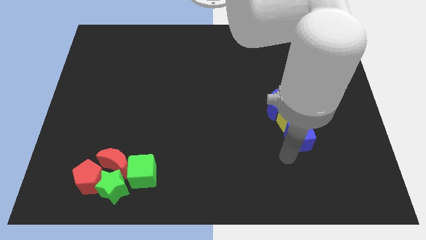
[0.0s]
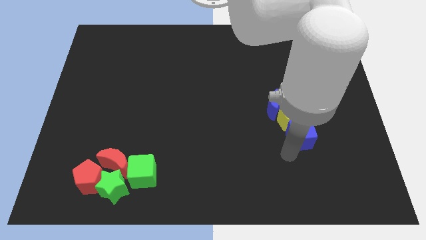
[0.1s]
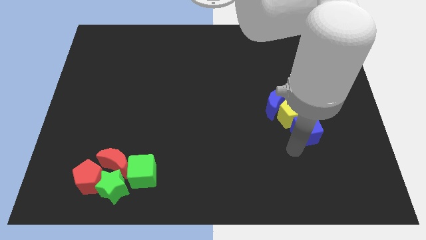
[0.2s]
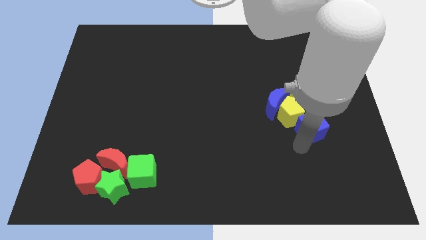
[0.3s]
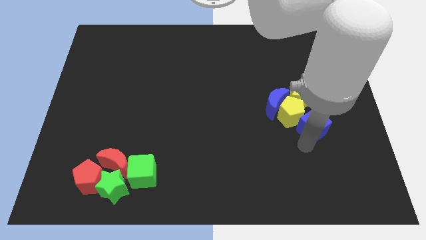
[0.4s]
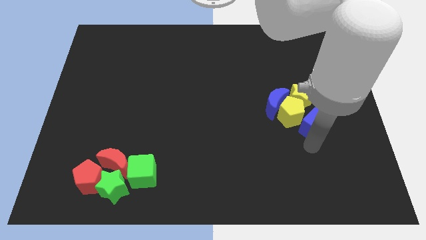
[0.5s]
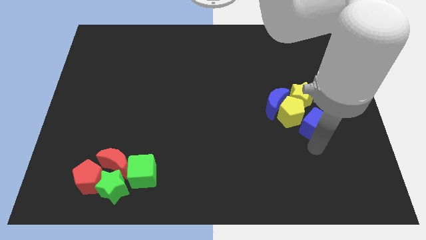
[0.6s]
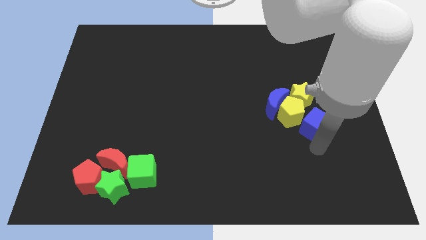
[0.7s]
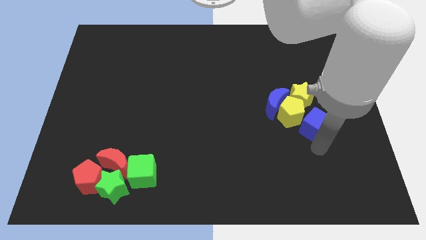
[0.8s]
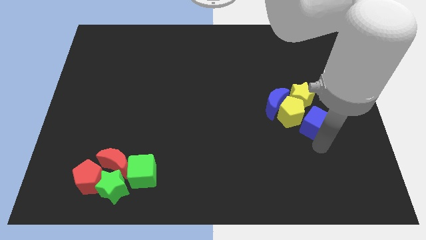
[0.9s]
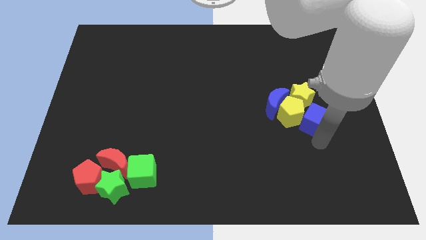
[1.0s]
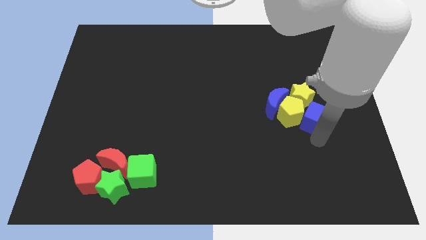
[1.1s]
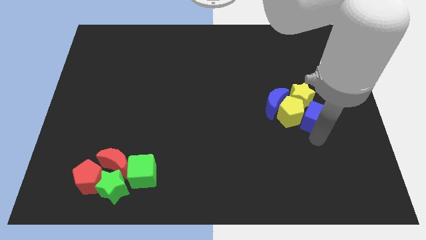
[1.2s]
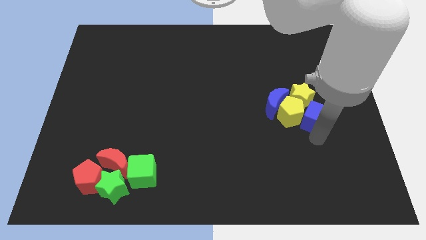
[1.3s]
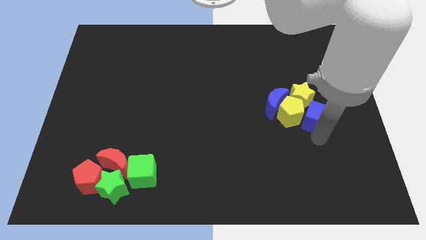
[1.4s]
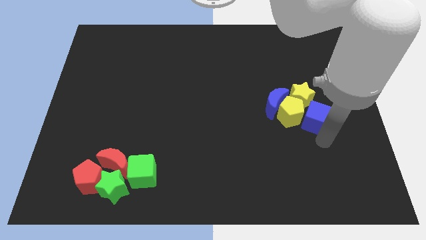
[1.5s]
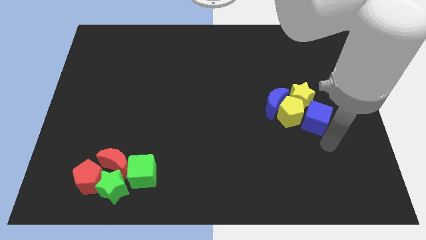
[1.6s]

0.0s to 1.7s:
move the blue cube right to the yellow pentagon

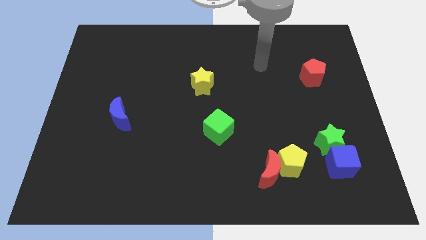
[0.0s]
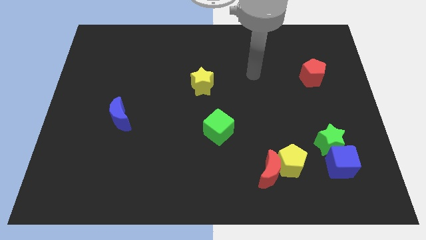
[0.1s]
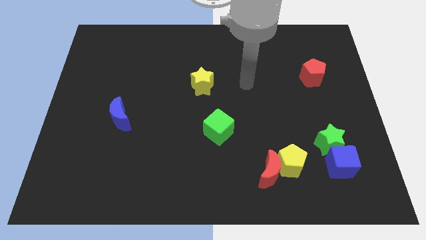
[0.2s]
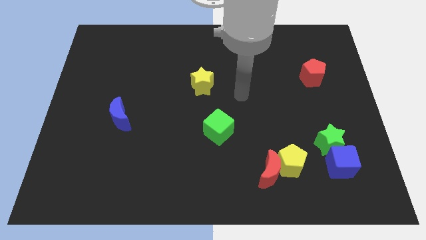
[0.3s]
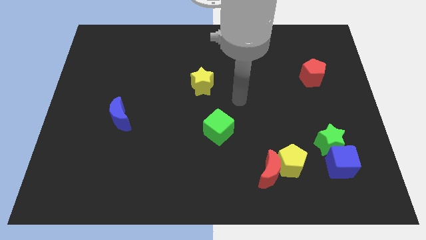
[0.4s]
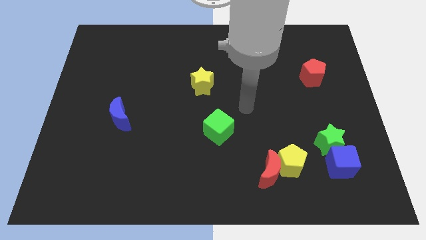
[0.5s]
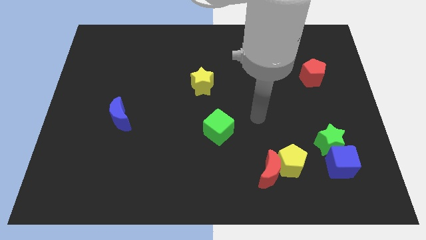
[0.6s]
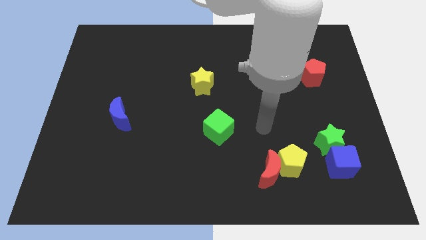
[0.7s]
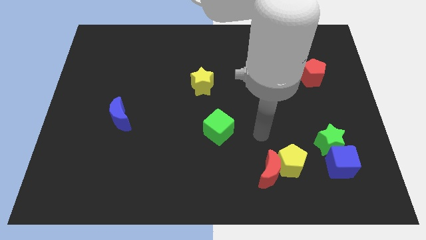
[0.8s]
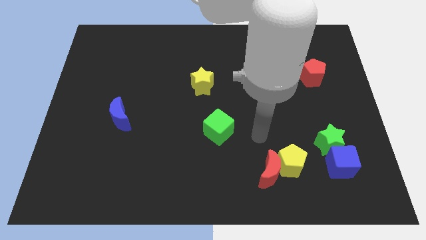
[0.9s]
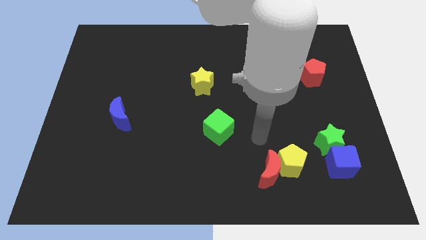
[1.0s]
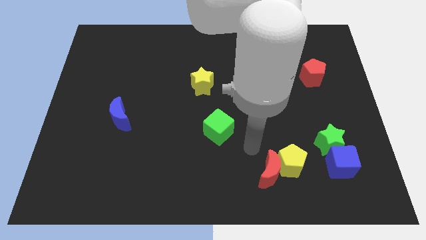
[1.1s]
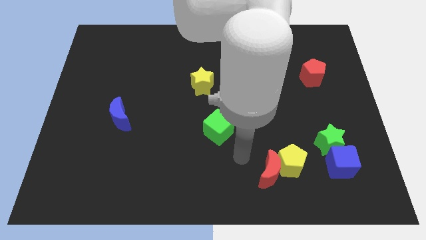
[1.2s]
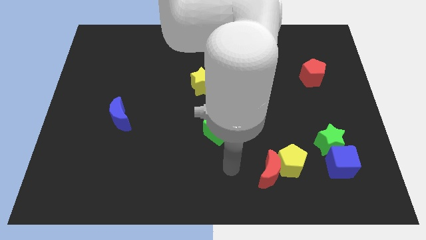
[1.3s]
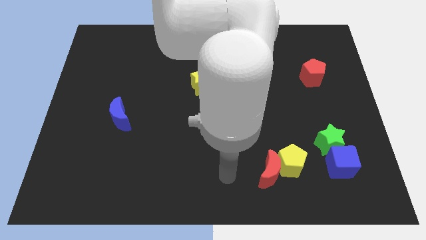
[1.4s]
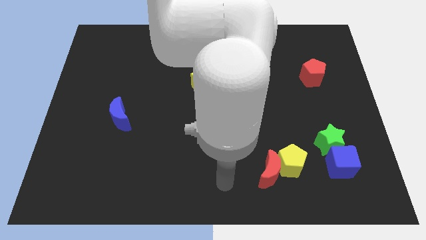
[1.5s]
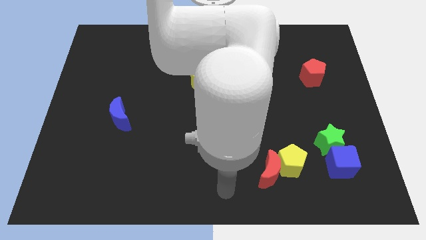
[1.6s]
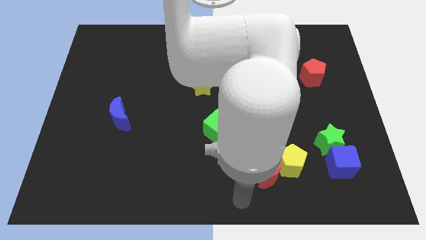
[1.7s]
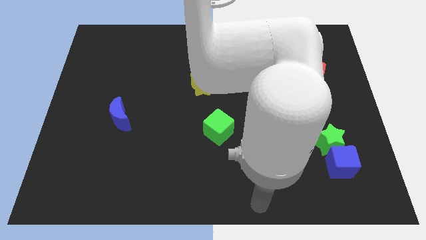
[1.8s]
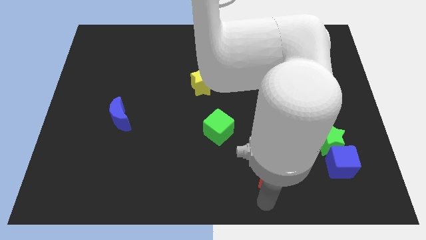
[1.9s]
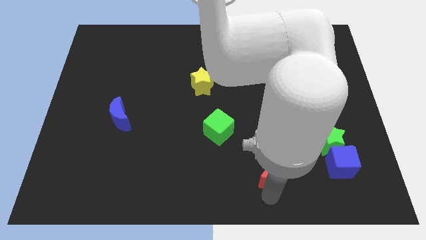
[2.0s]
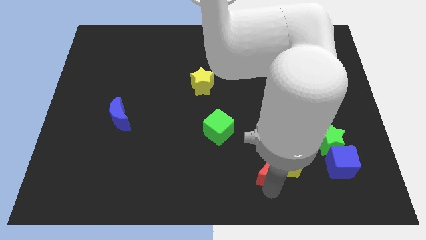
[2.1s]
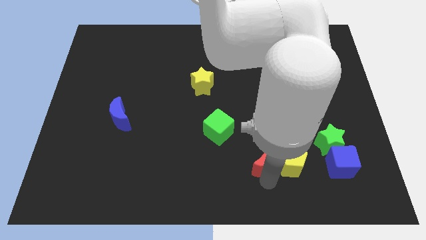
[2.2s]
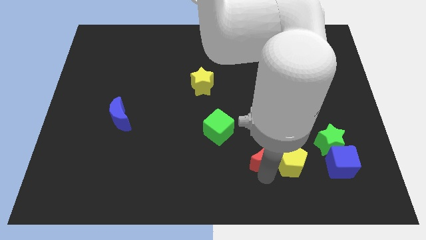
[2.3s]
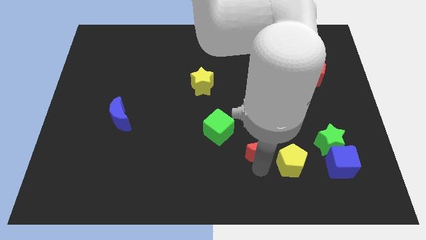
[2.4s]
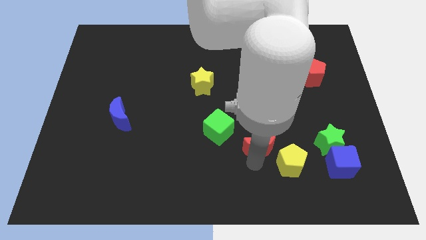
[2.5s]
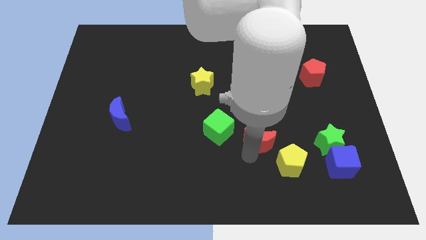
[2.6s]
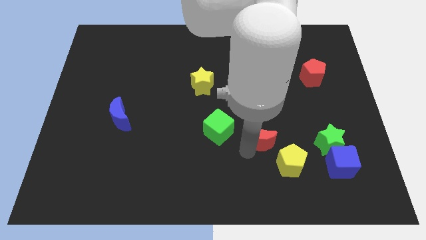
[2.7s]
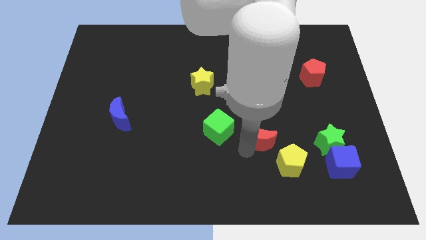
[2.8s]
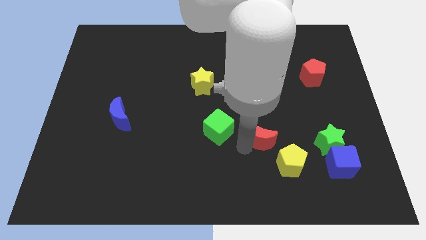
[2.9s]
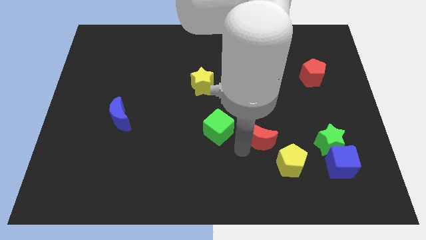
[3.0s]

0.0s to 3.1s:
slide red moon to the right of green cube

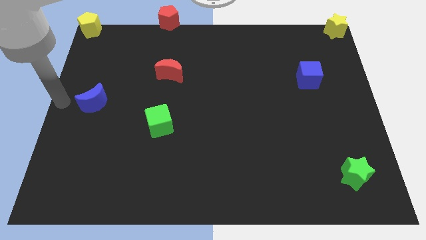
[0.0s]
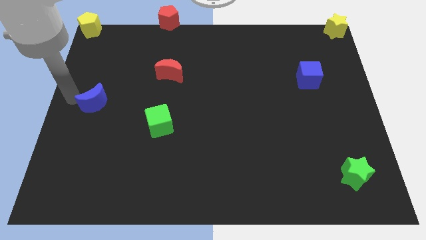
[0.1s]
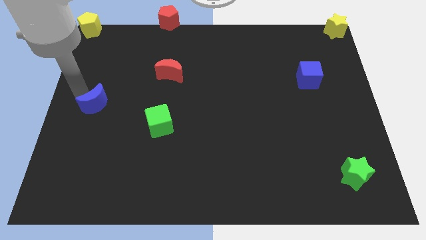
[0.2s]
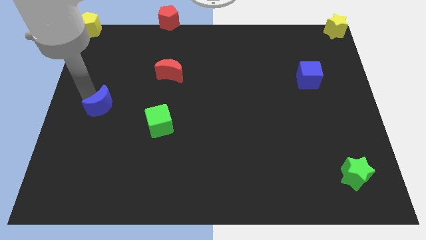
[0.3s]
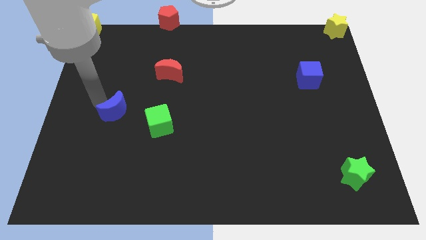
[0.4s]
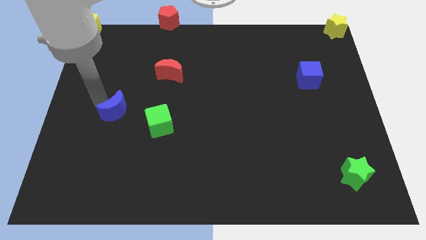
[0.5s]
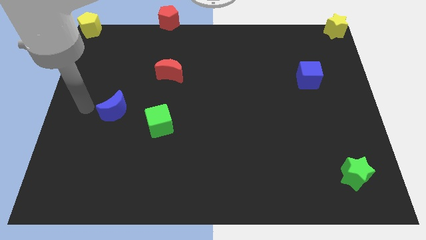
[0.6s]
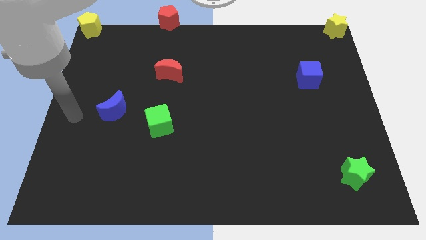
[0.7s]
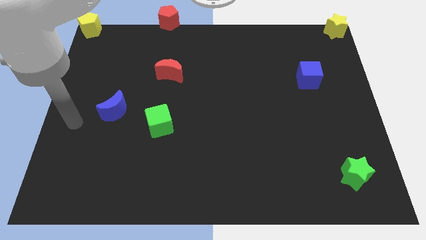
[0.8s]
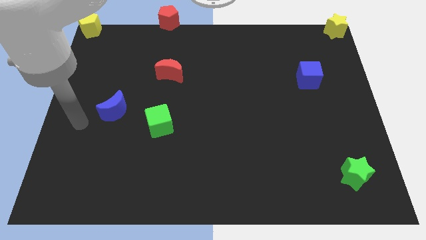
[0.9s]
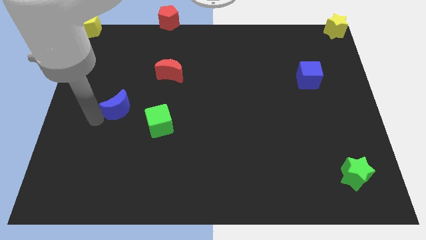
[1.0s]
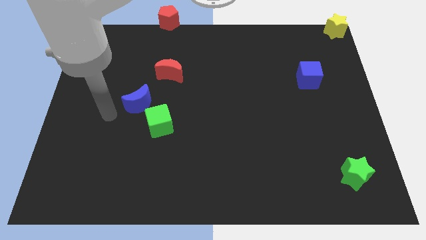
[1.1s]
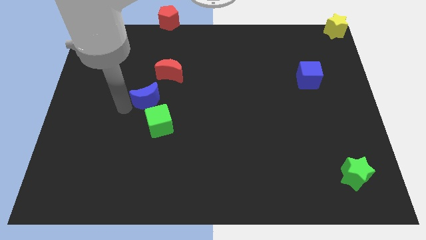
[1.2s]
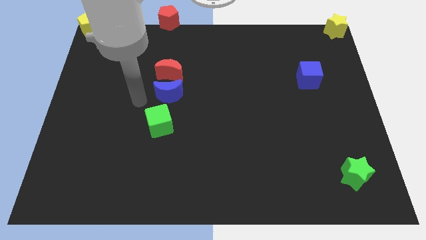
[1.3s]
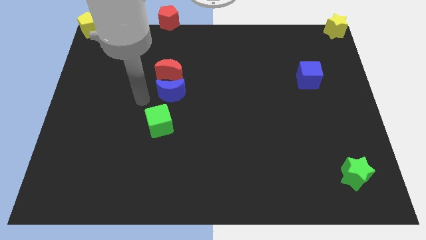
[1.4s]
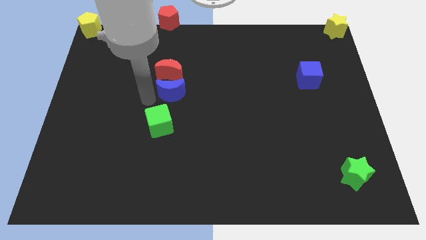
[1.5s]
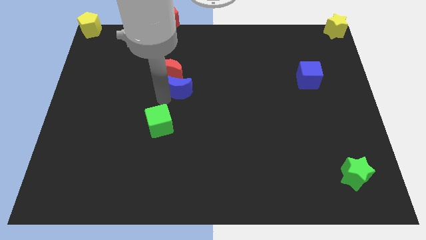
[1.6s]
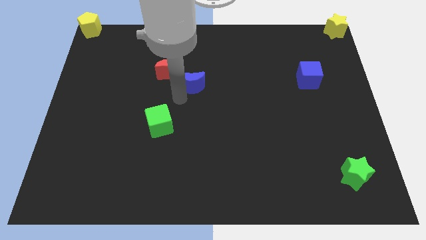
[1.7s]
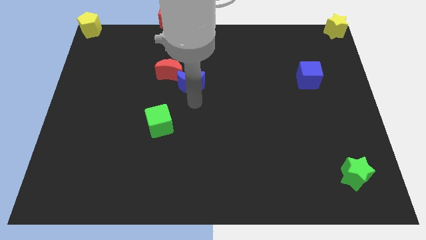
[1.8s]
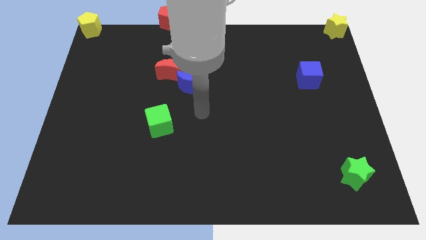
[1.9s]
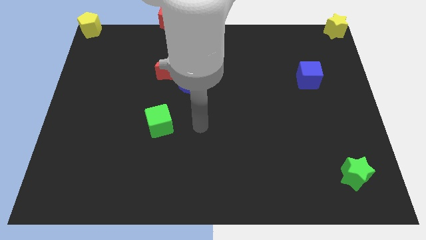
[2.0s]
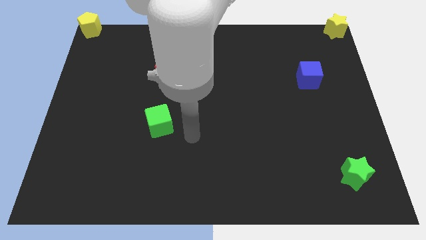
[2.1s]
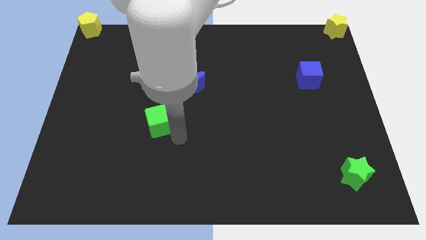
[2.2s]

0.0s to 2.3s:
move blue moon to the bottom right of red moon

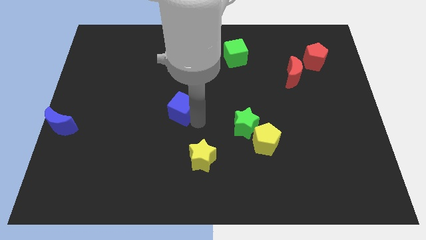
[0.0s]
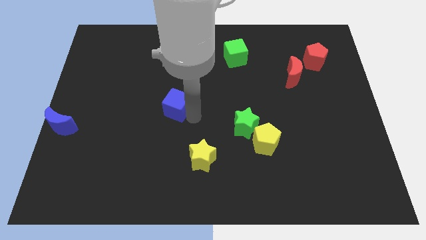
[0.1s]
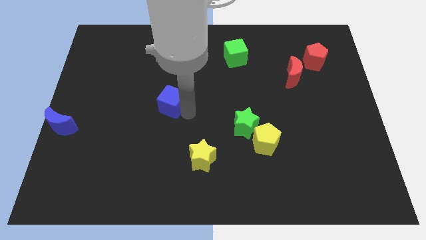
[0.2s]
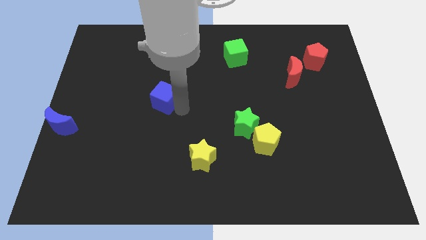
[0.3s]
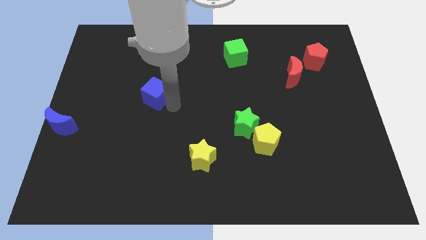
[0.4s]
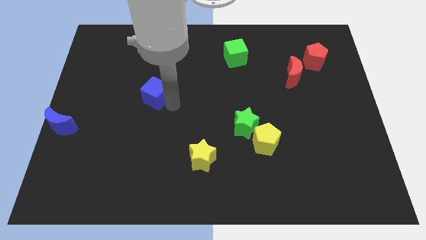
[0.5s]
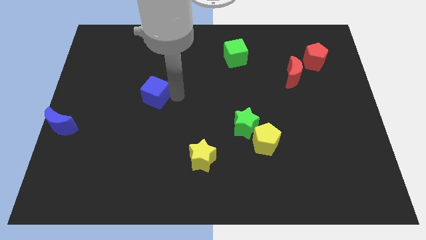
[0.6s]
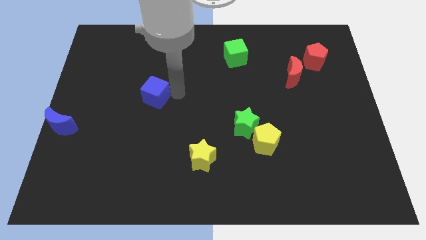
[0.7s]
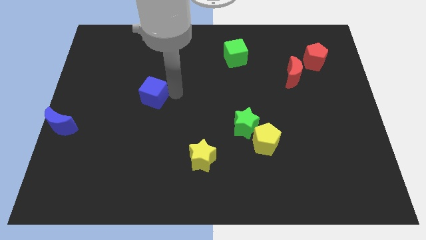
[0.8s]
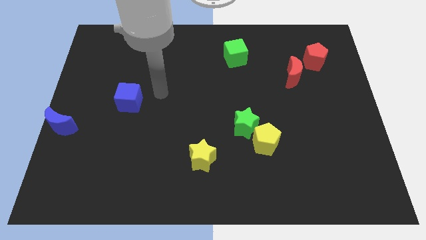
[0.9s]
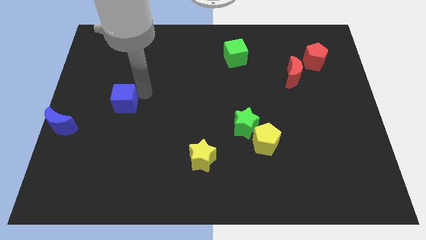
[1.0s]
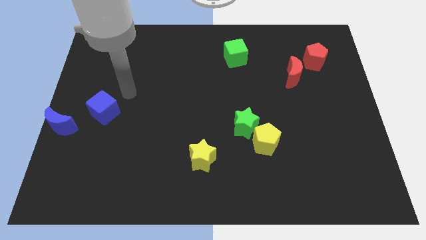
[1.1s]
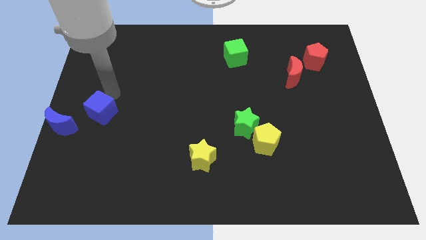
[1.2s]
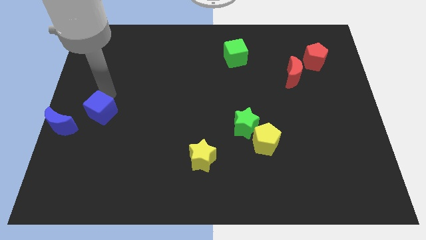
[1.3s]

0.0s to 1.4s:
slide the blue cube to the left

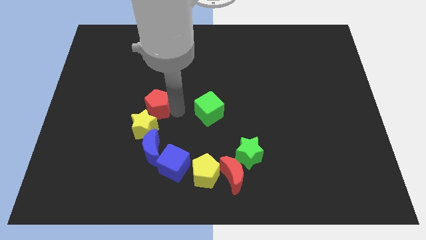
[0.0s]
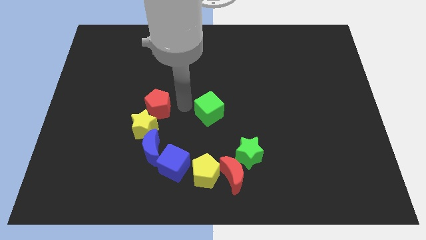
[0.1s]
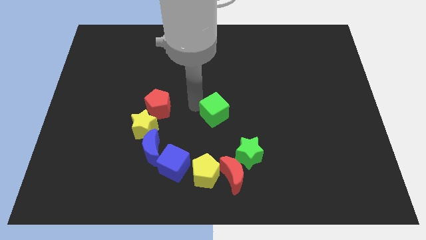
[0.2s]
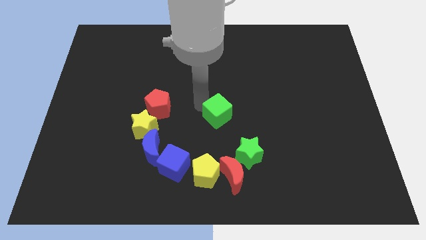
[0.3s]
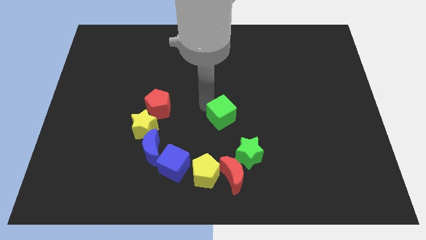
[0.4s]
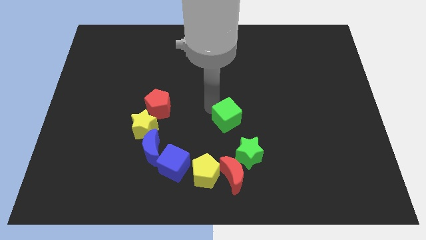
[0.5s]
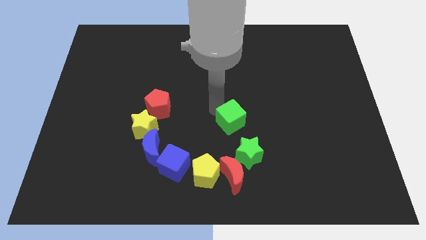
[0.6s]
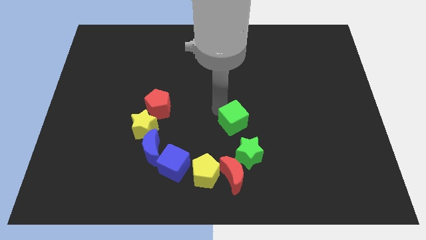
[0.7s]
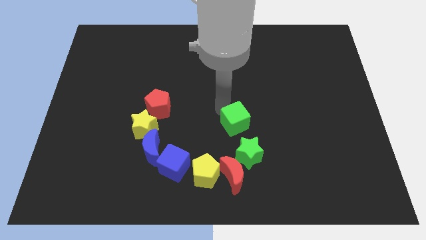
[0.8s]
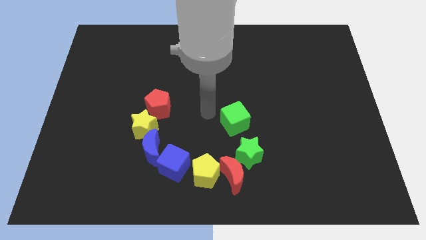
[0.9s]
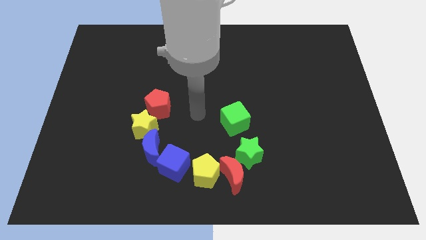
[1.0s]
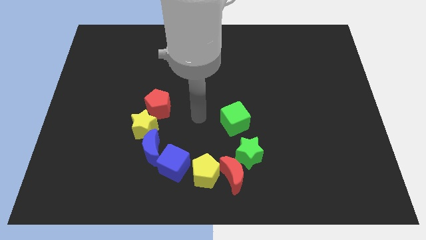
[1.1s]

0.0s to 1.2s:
push the green cube towards the green star
